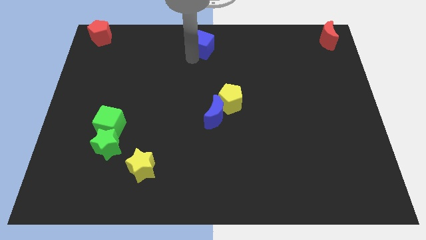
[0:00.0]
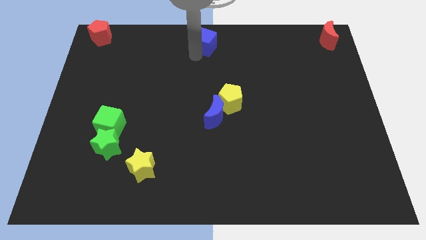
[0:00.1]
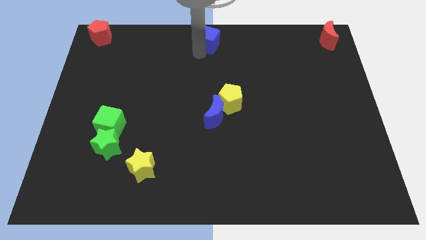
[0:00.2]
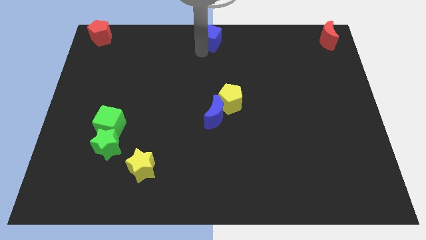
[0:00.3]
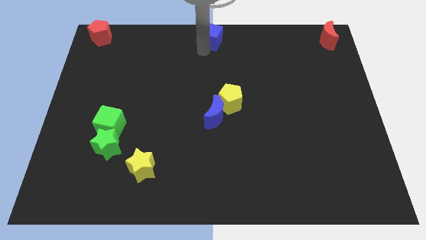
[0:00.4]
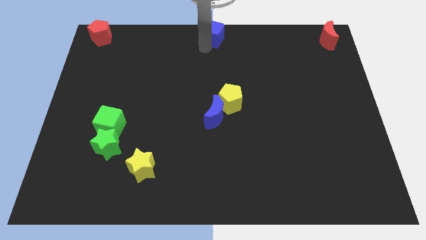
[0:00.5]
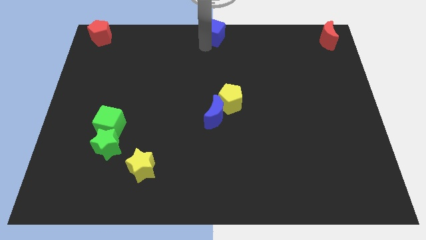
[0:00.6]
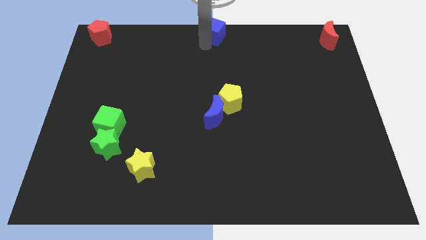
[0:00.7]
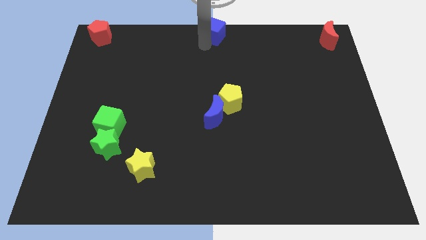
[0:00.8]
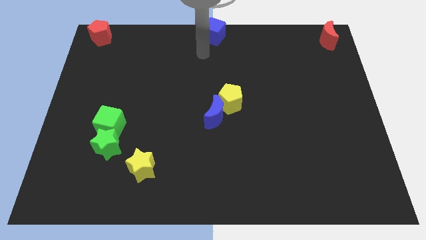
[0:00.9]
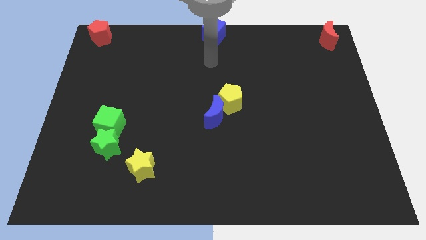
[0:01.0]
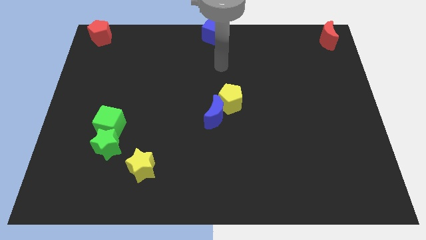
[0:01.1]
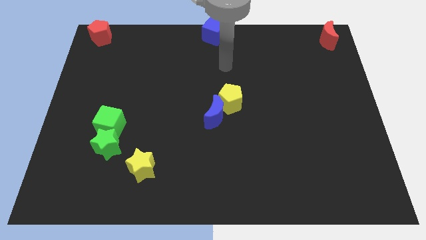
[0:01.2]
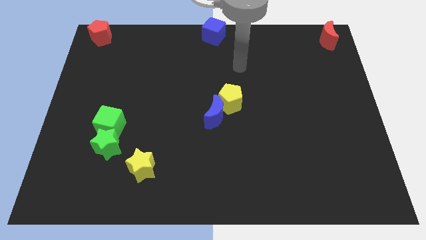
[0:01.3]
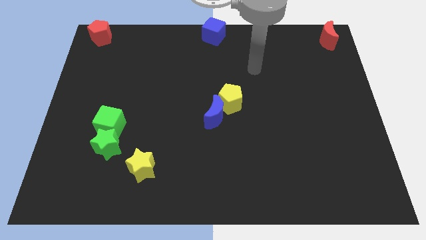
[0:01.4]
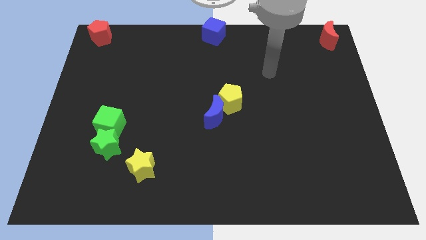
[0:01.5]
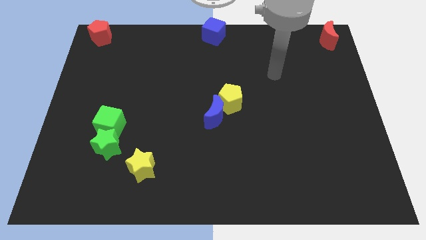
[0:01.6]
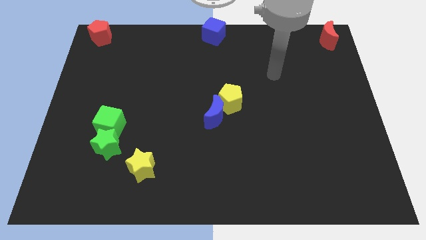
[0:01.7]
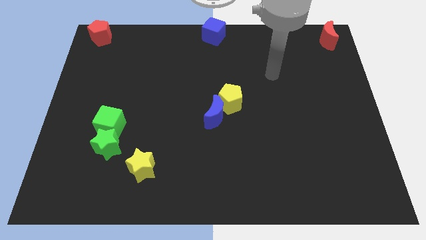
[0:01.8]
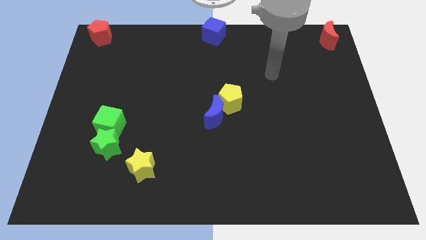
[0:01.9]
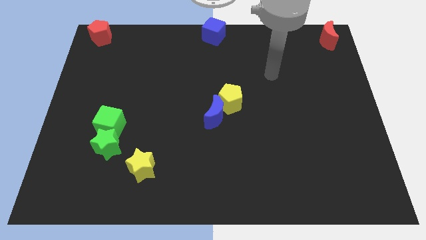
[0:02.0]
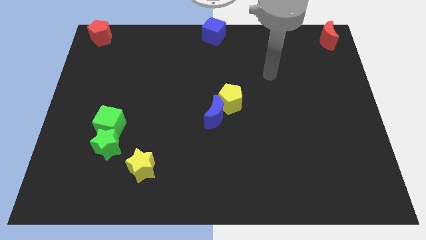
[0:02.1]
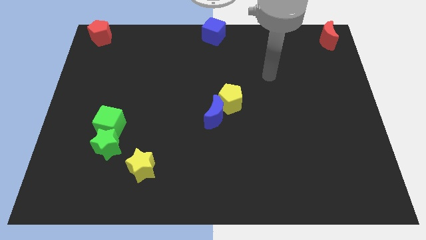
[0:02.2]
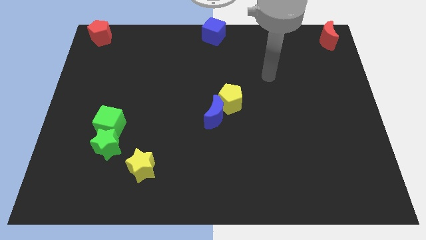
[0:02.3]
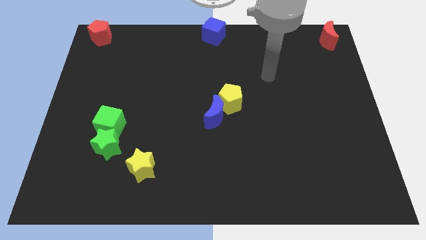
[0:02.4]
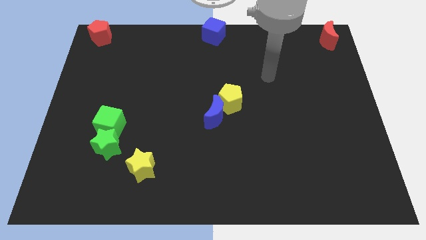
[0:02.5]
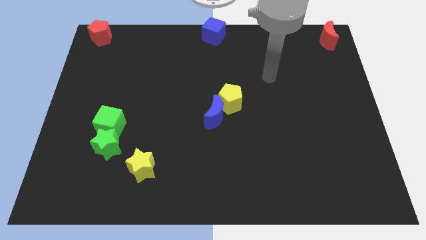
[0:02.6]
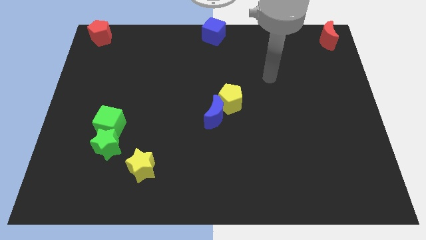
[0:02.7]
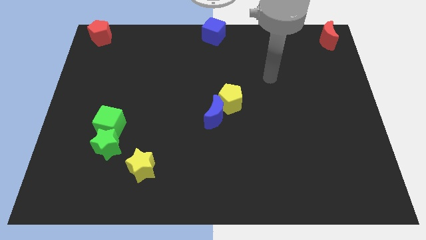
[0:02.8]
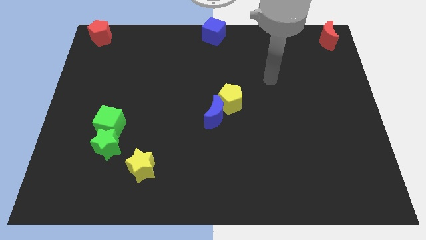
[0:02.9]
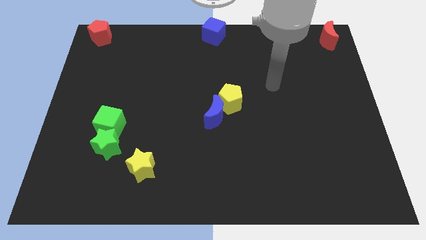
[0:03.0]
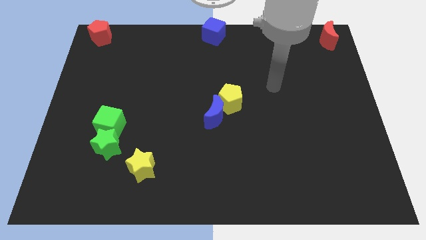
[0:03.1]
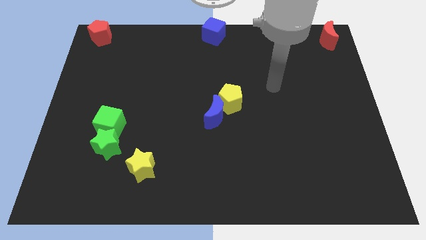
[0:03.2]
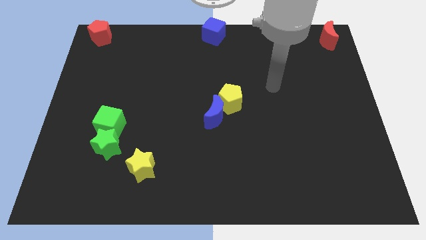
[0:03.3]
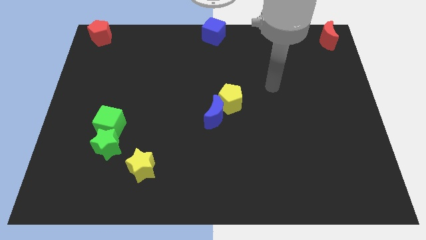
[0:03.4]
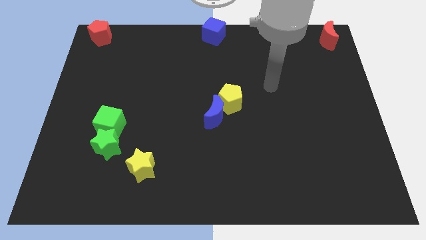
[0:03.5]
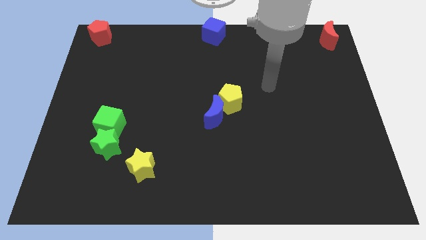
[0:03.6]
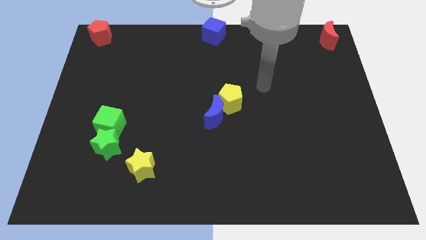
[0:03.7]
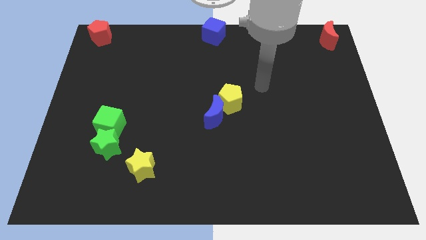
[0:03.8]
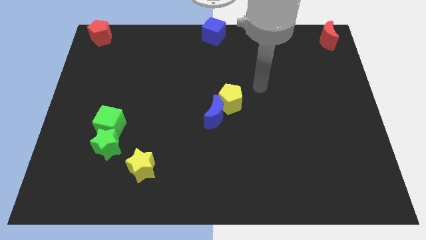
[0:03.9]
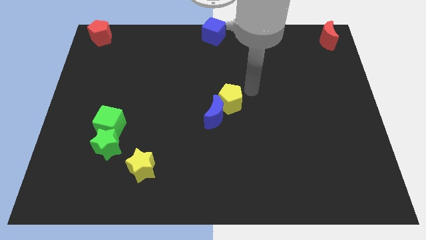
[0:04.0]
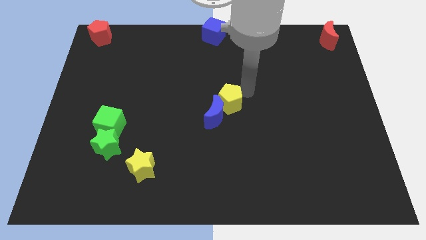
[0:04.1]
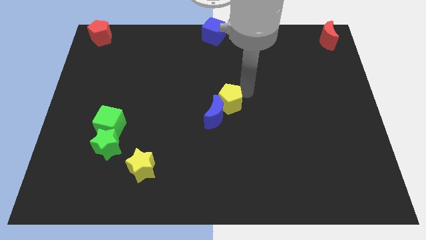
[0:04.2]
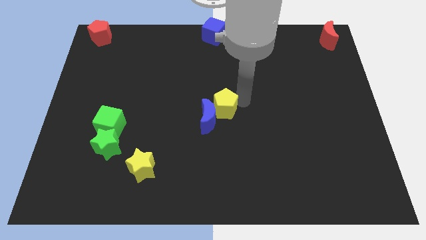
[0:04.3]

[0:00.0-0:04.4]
move your arm close to the yellow pentagon

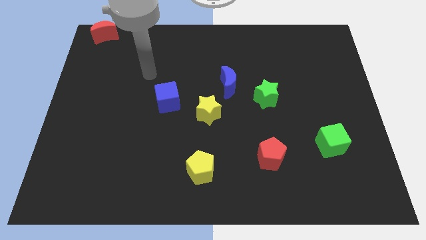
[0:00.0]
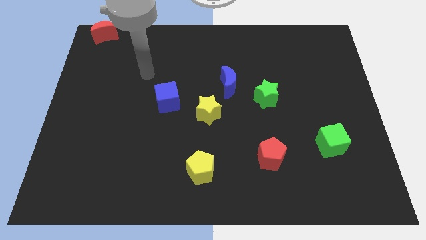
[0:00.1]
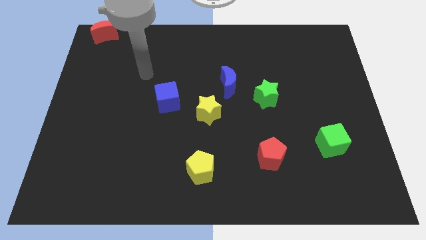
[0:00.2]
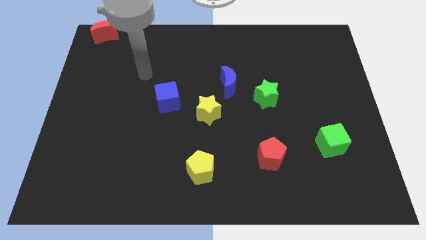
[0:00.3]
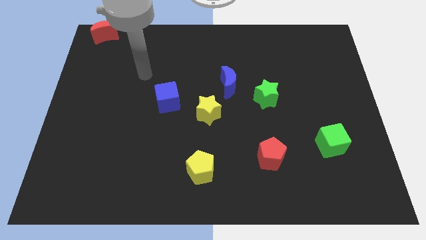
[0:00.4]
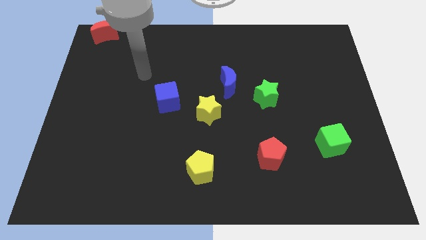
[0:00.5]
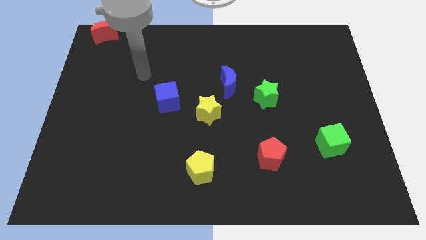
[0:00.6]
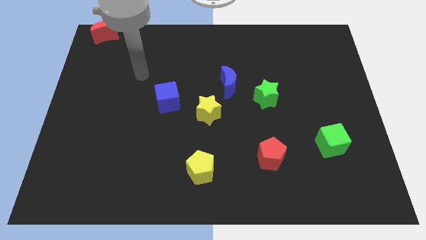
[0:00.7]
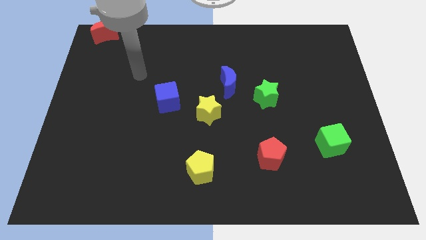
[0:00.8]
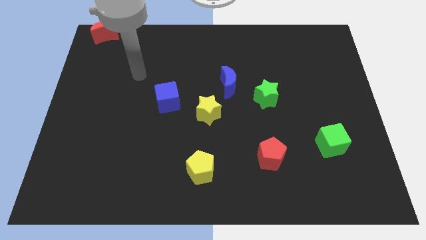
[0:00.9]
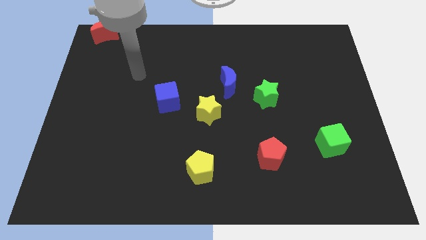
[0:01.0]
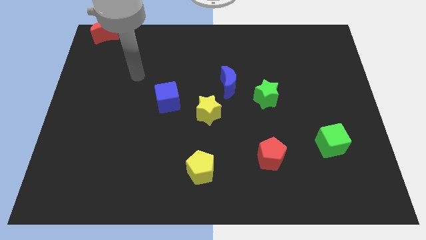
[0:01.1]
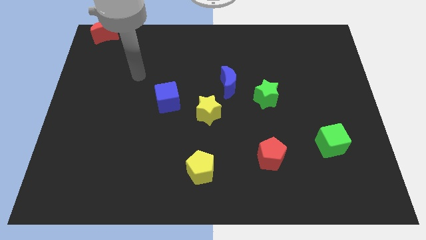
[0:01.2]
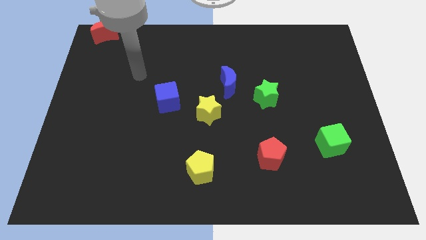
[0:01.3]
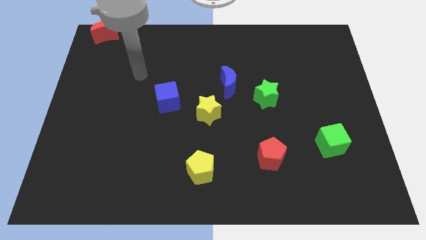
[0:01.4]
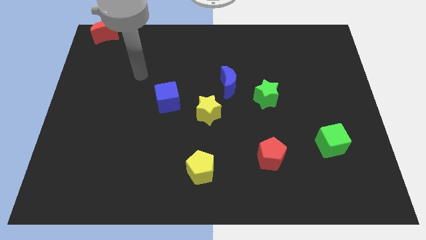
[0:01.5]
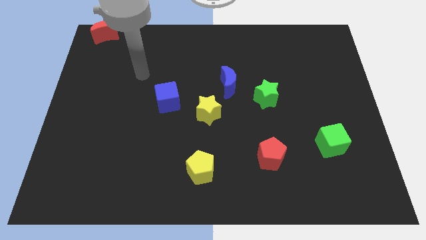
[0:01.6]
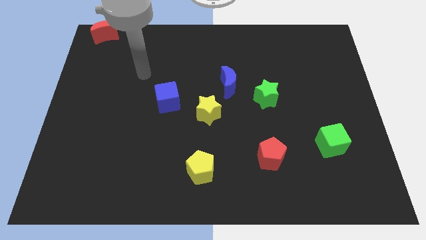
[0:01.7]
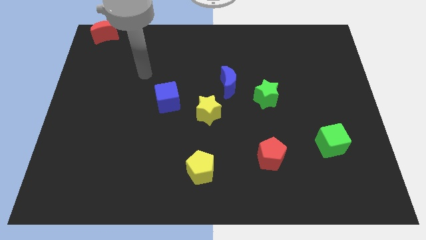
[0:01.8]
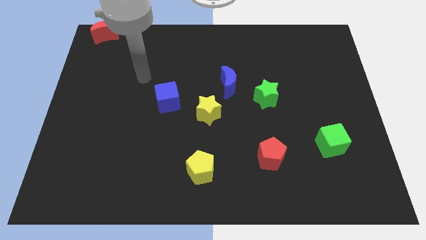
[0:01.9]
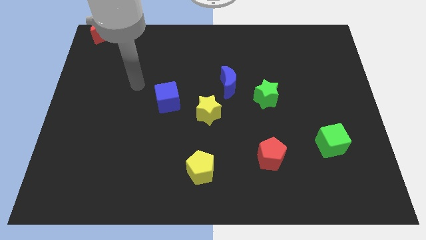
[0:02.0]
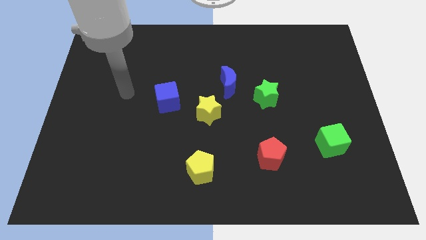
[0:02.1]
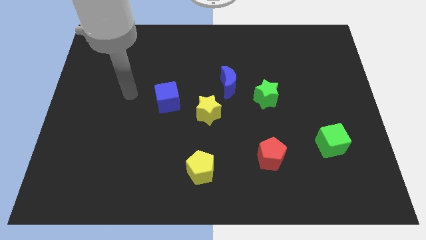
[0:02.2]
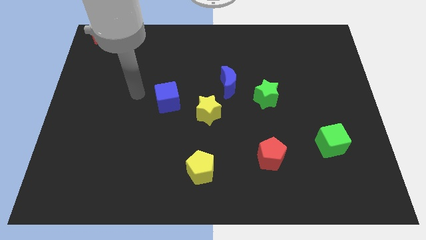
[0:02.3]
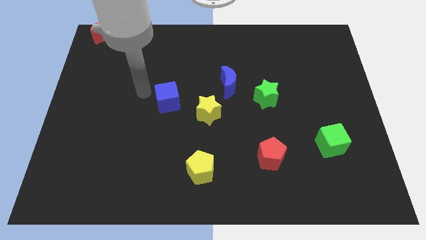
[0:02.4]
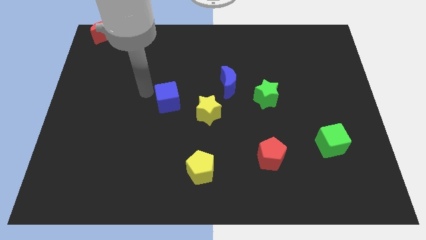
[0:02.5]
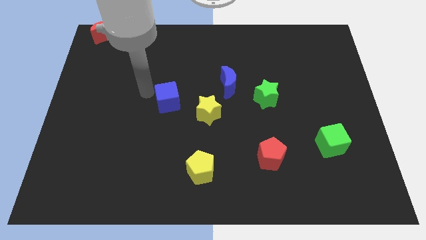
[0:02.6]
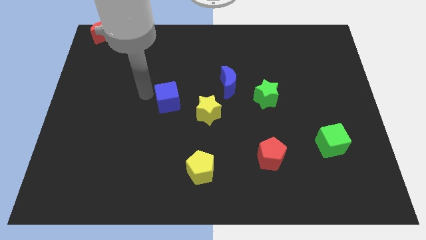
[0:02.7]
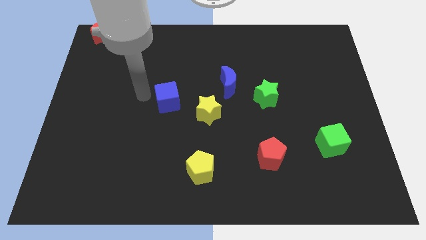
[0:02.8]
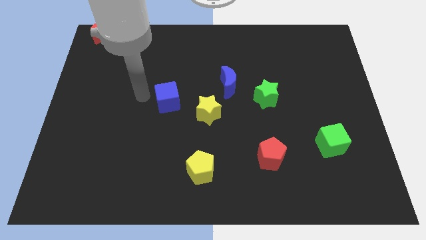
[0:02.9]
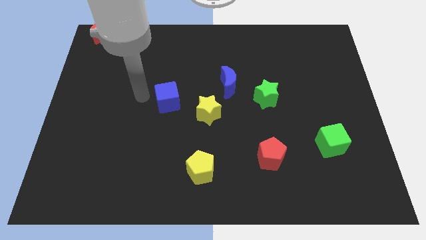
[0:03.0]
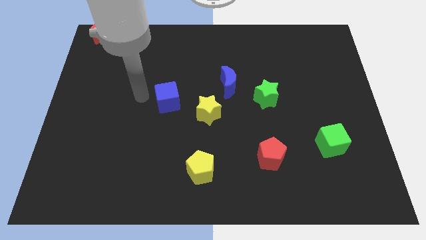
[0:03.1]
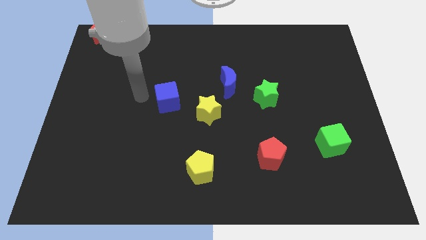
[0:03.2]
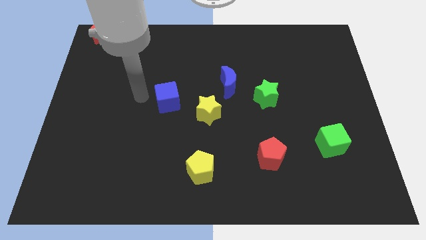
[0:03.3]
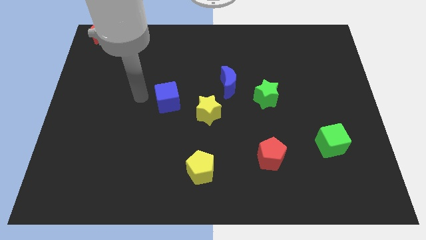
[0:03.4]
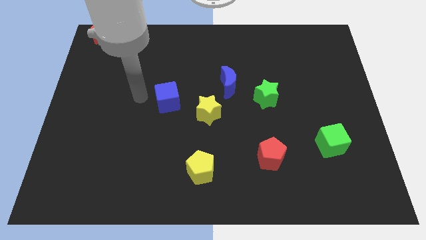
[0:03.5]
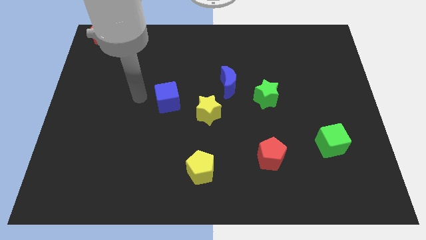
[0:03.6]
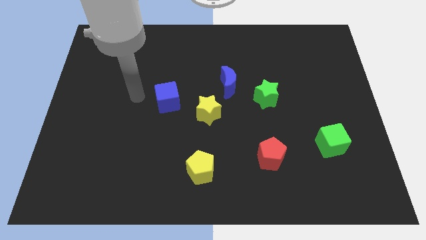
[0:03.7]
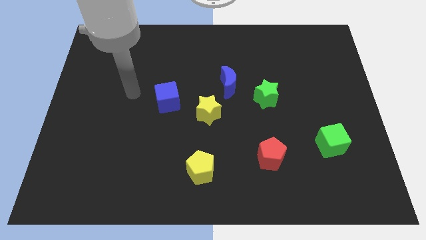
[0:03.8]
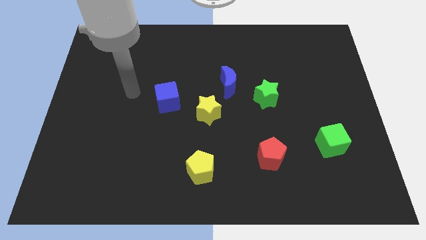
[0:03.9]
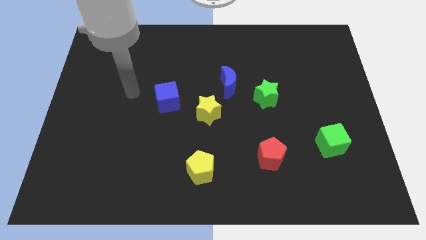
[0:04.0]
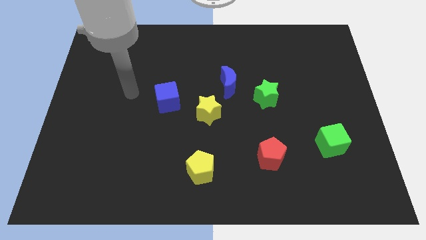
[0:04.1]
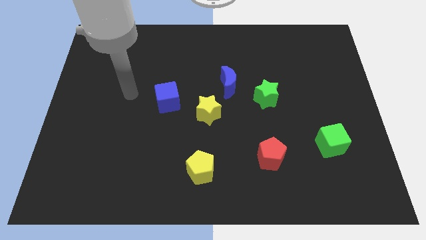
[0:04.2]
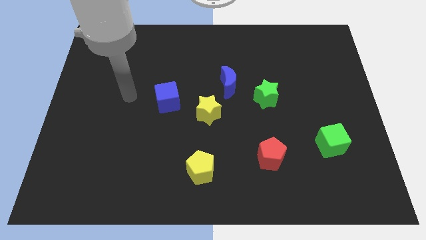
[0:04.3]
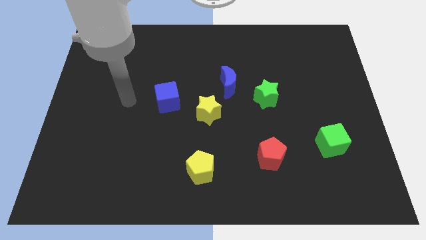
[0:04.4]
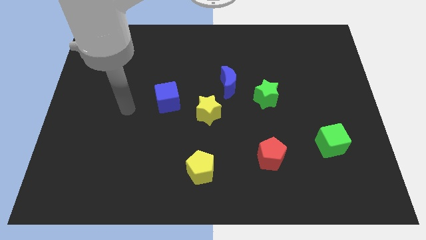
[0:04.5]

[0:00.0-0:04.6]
place your arm at the left of the blue cube
